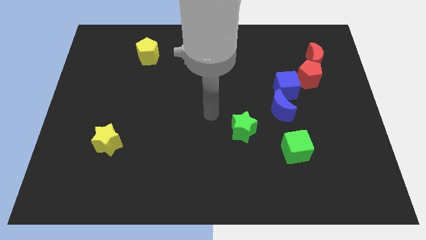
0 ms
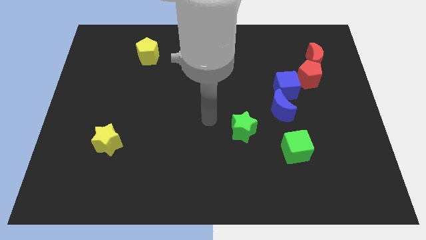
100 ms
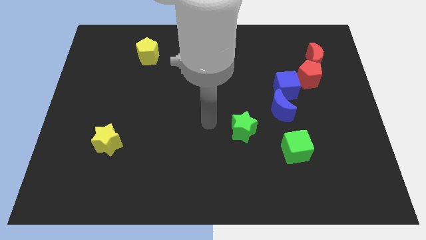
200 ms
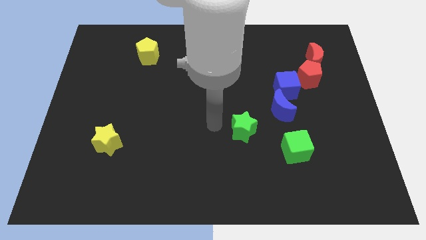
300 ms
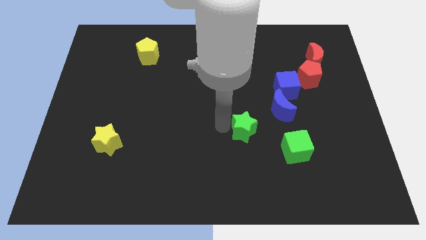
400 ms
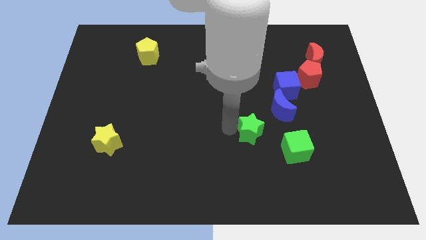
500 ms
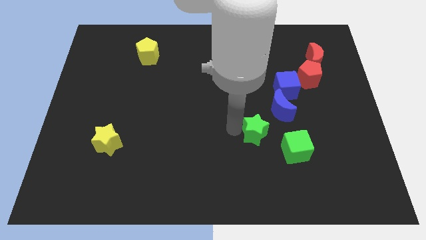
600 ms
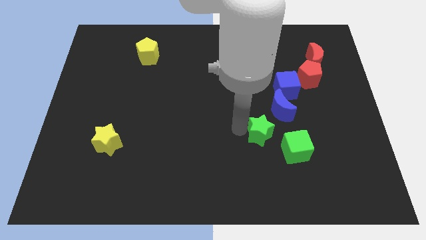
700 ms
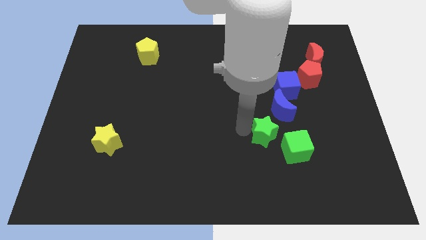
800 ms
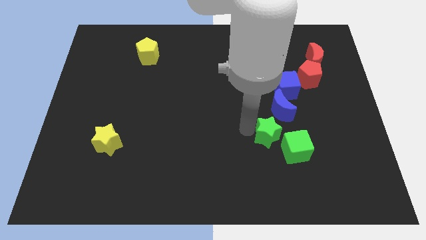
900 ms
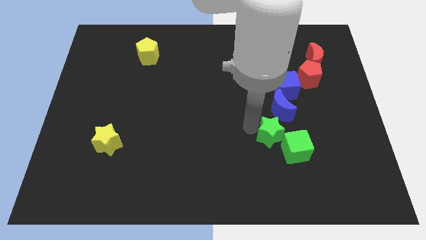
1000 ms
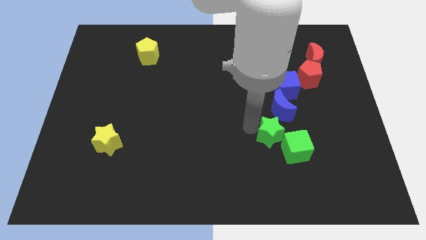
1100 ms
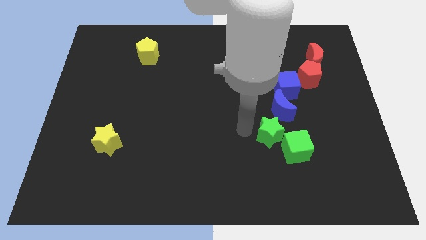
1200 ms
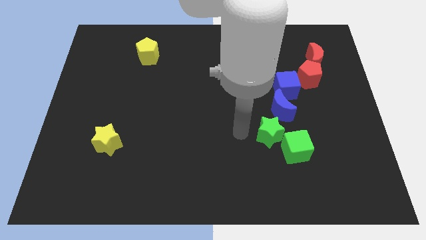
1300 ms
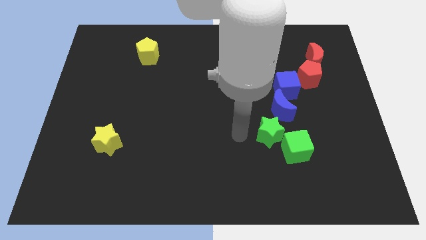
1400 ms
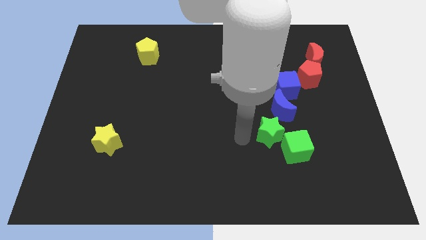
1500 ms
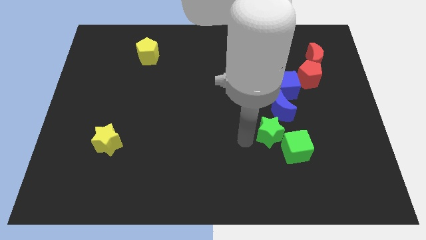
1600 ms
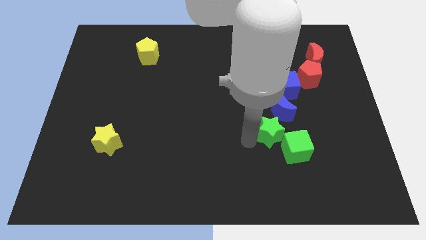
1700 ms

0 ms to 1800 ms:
push the green star near to the green cube

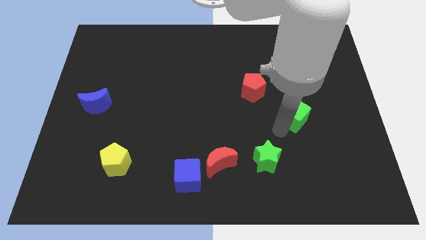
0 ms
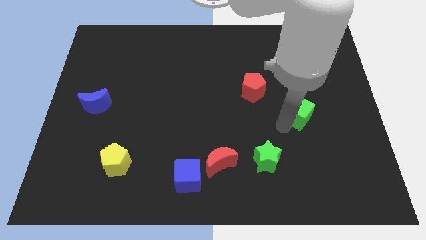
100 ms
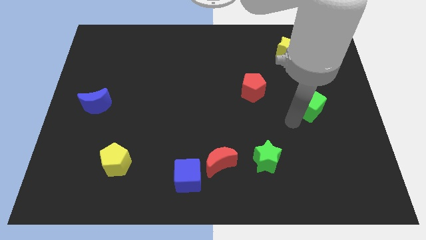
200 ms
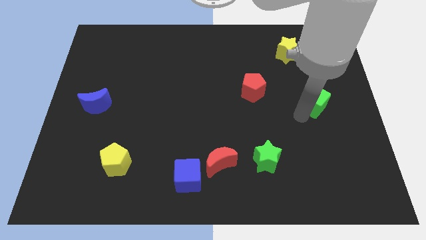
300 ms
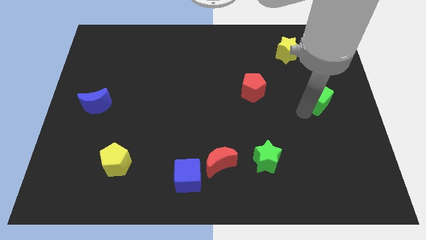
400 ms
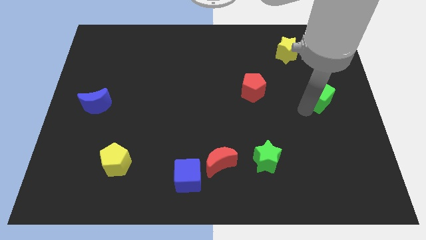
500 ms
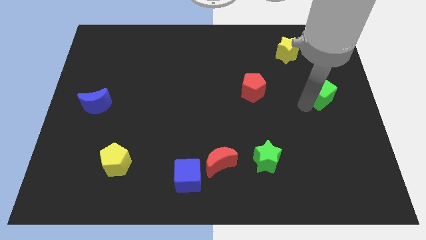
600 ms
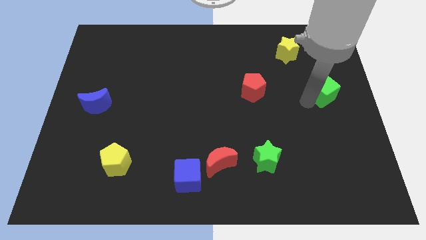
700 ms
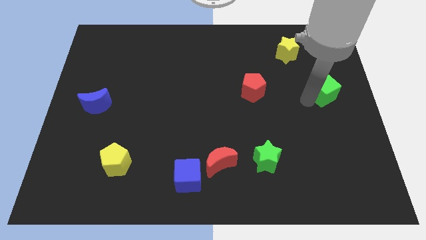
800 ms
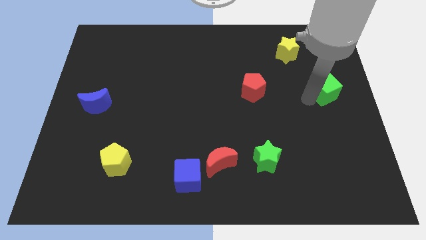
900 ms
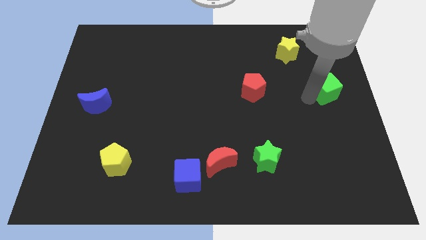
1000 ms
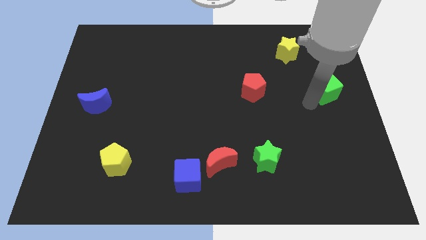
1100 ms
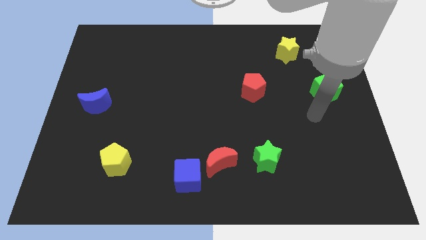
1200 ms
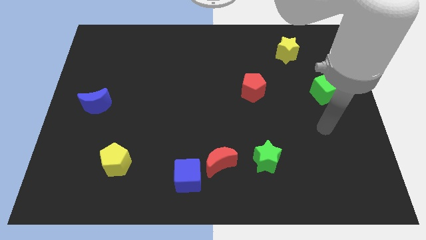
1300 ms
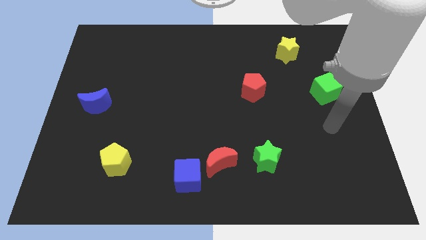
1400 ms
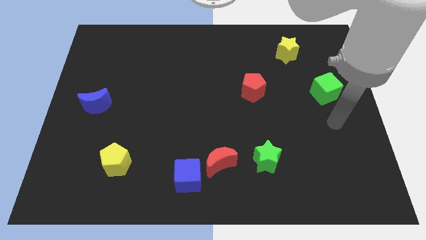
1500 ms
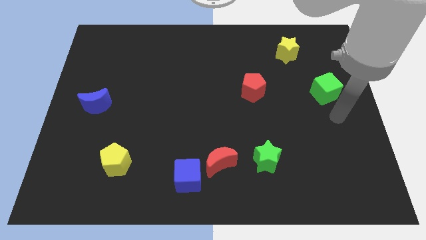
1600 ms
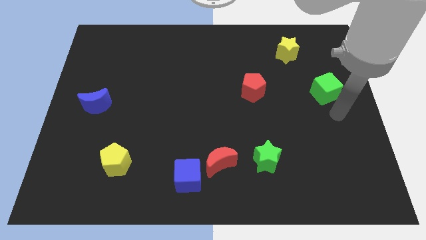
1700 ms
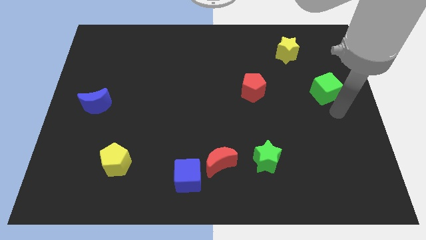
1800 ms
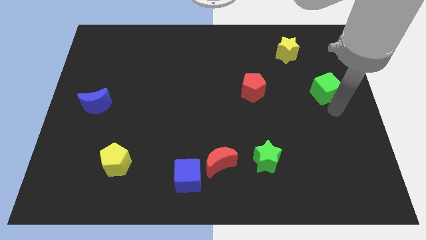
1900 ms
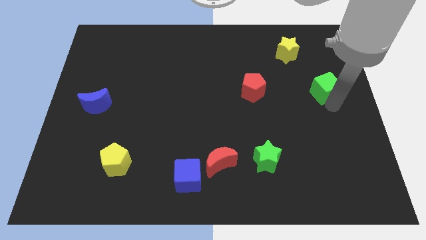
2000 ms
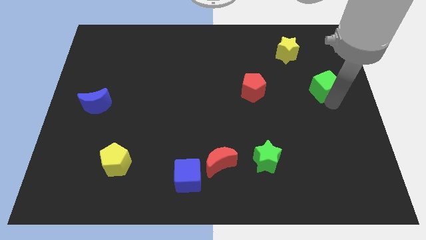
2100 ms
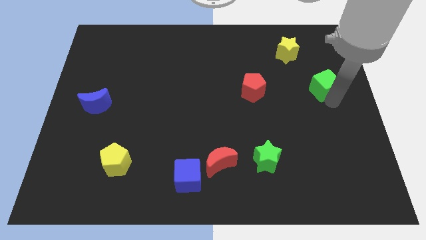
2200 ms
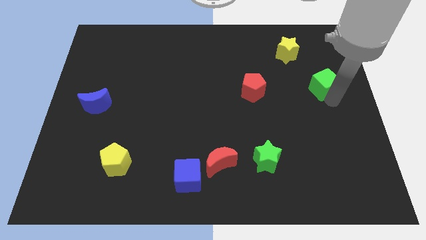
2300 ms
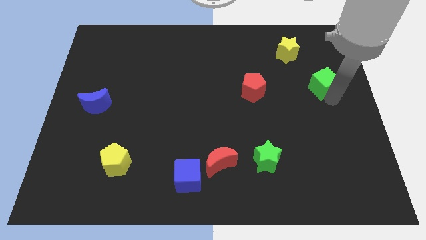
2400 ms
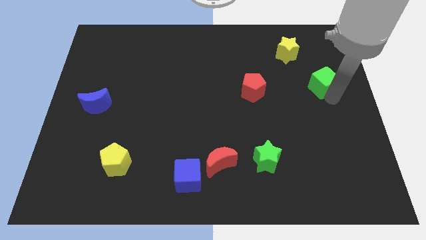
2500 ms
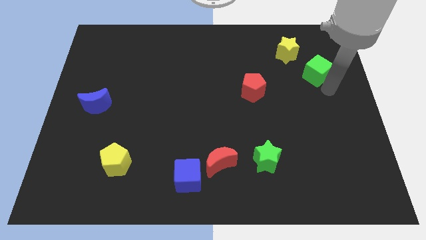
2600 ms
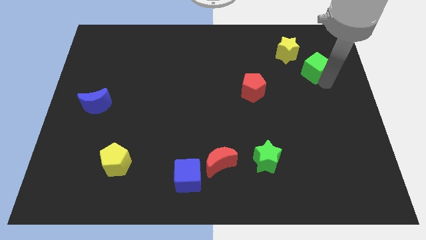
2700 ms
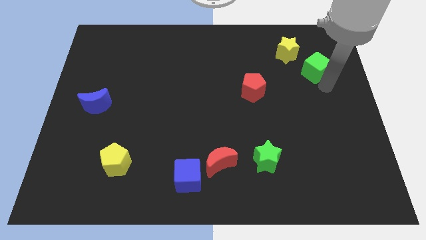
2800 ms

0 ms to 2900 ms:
slide the green cube towards top center

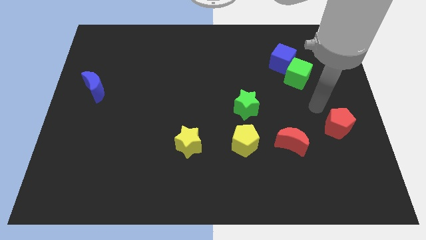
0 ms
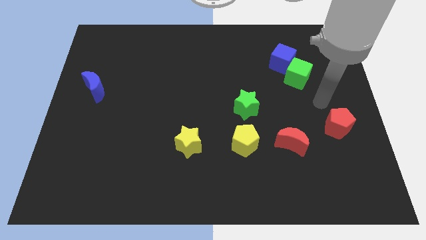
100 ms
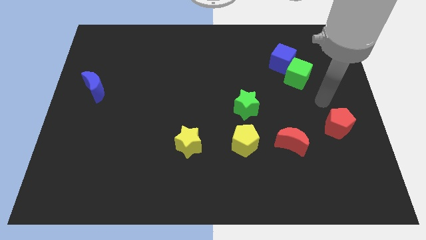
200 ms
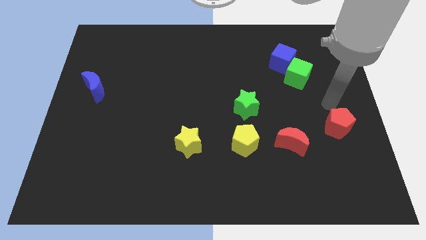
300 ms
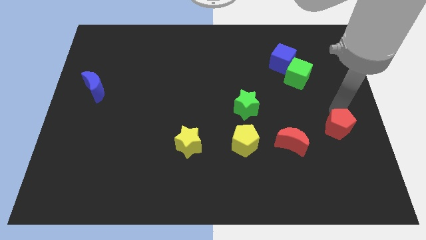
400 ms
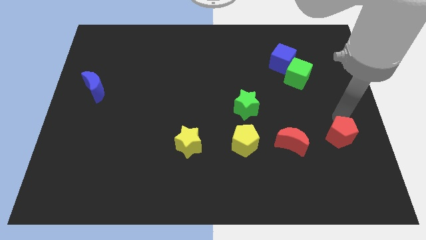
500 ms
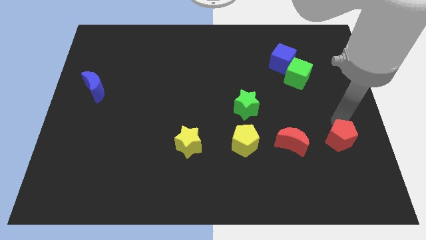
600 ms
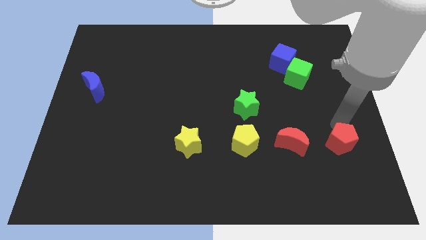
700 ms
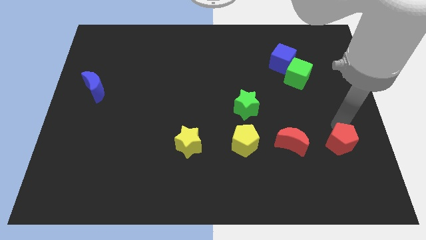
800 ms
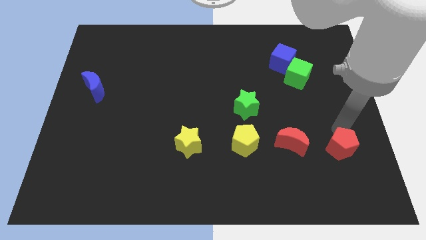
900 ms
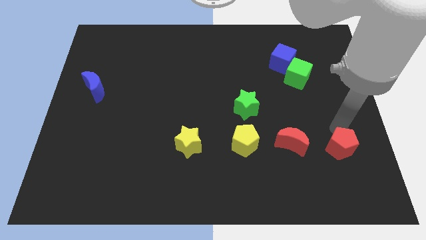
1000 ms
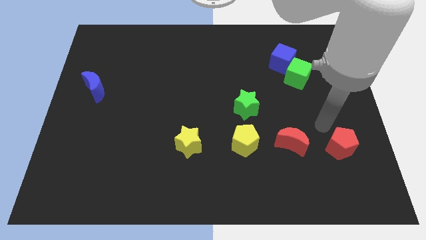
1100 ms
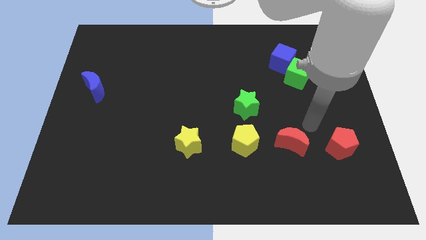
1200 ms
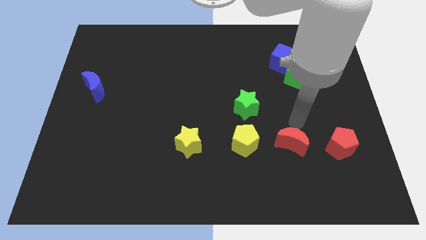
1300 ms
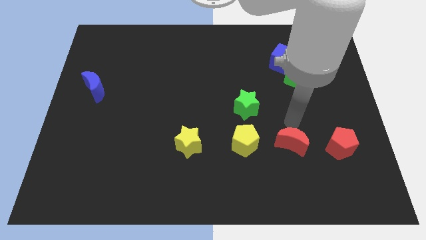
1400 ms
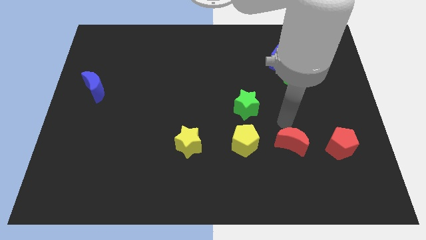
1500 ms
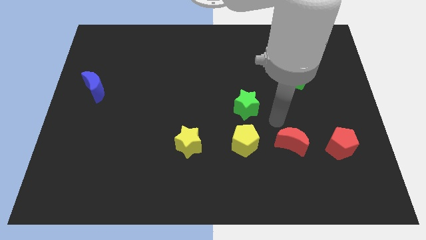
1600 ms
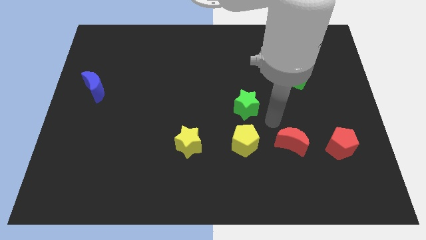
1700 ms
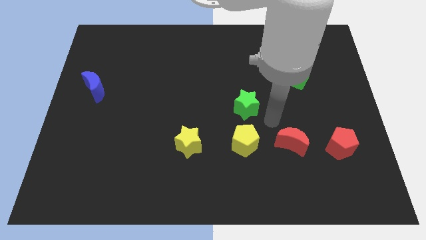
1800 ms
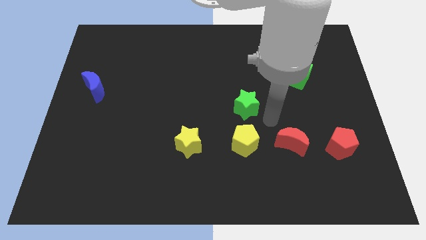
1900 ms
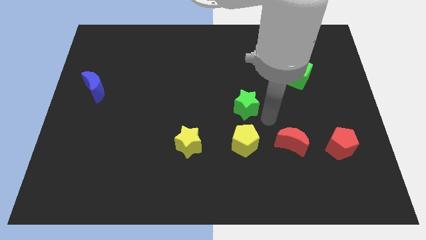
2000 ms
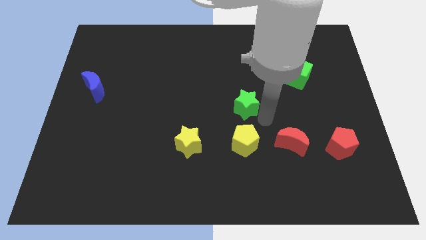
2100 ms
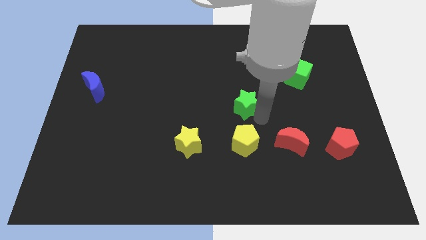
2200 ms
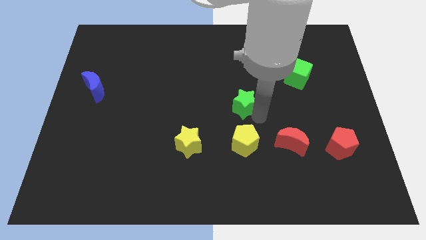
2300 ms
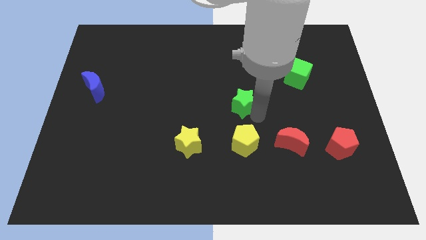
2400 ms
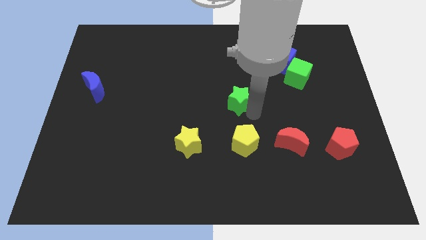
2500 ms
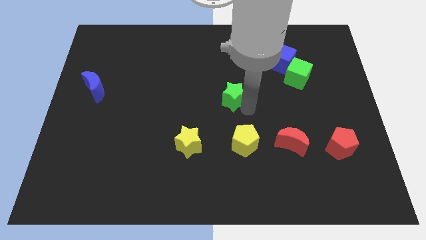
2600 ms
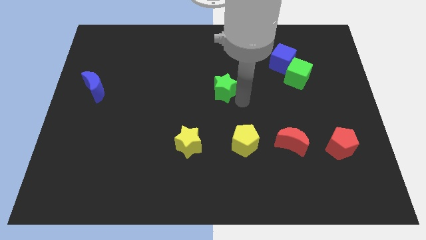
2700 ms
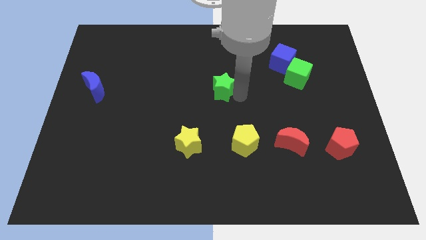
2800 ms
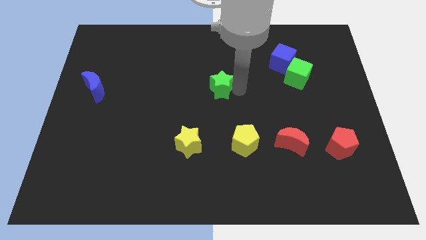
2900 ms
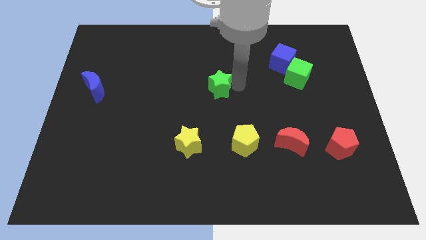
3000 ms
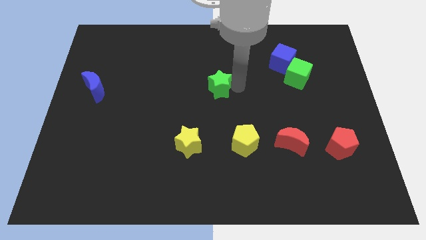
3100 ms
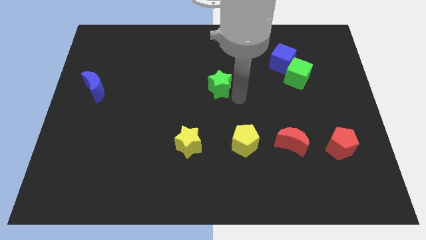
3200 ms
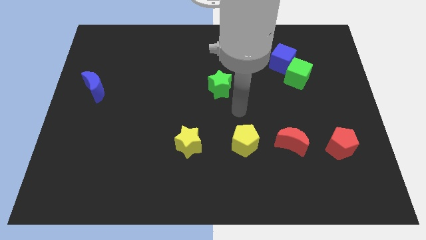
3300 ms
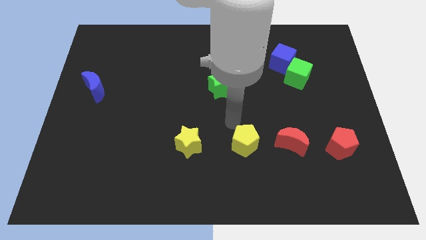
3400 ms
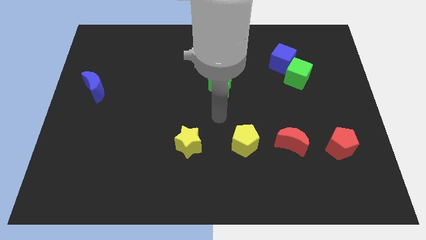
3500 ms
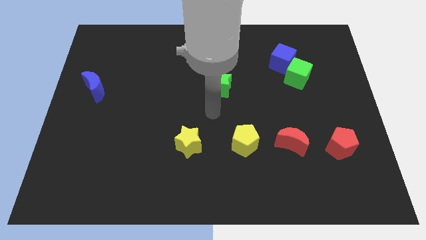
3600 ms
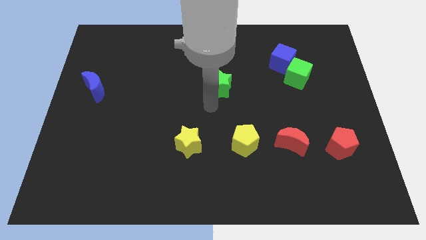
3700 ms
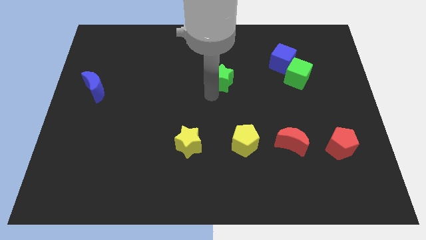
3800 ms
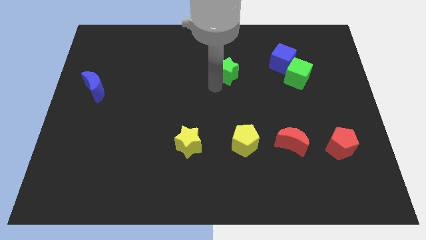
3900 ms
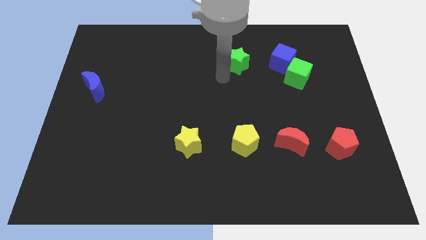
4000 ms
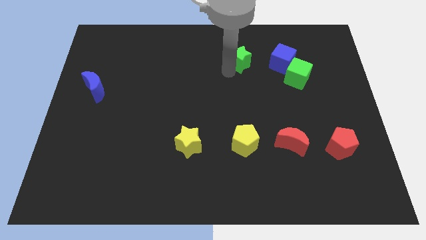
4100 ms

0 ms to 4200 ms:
push the green star to the left of the blue cube

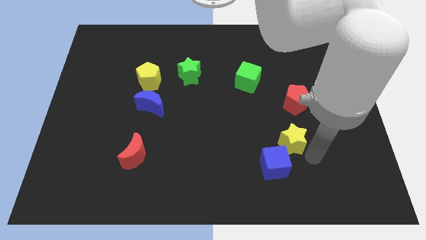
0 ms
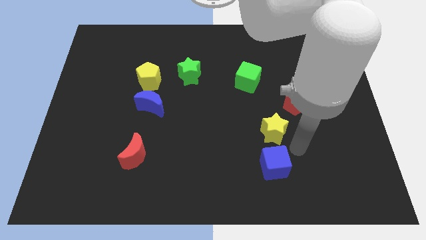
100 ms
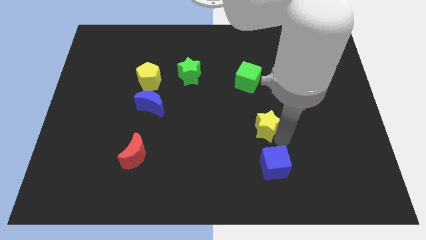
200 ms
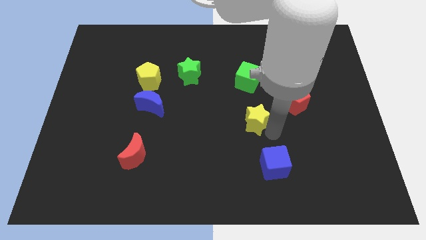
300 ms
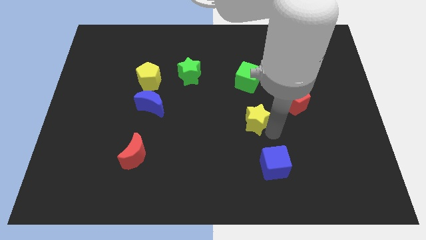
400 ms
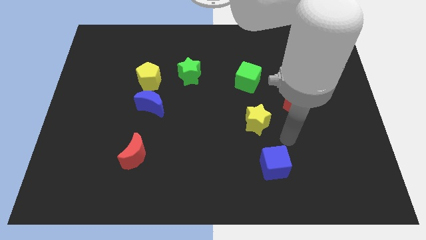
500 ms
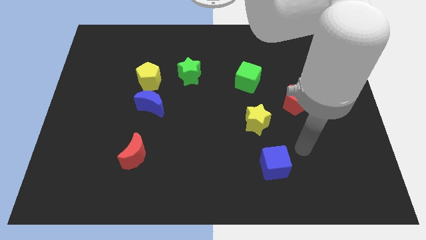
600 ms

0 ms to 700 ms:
place the yellow star below the green cube
